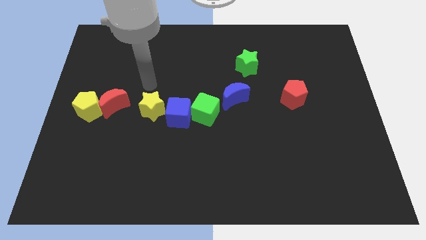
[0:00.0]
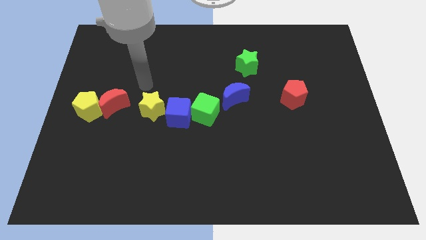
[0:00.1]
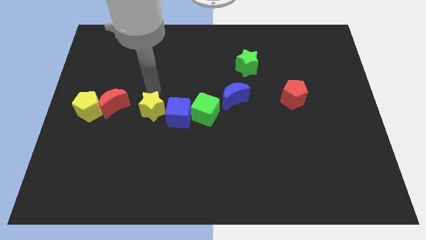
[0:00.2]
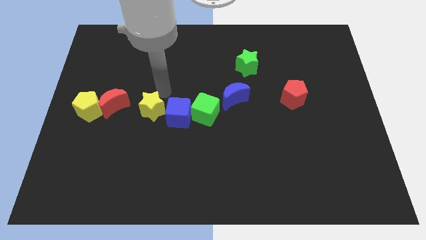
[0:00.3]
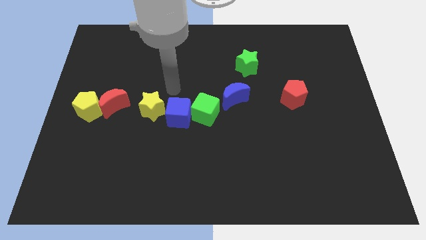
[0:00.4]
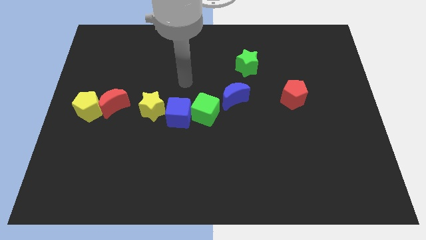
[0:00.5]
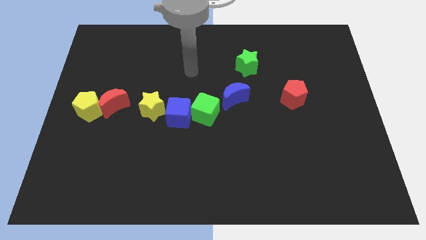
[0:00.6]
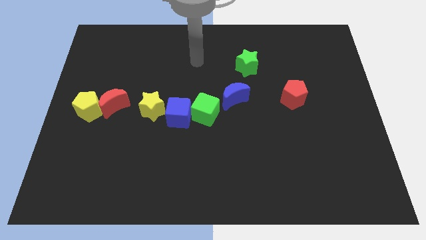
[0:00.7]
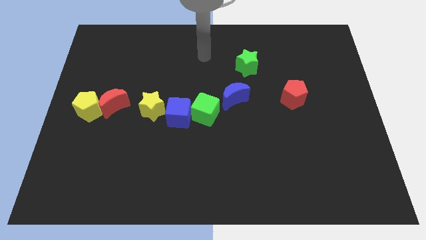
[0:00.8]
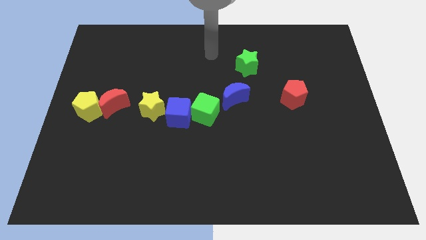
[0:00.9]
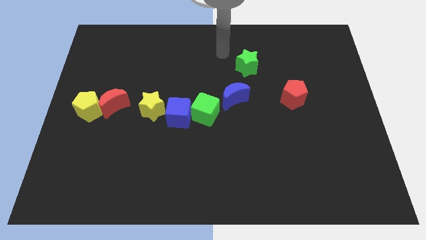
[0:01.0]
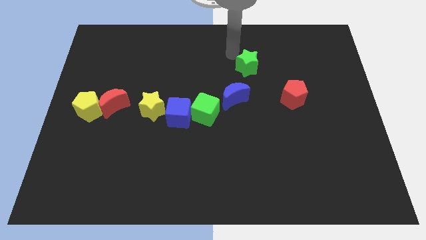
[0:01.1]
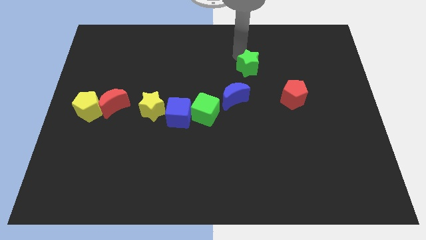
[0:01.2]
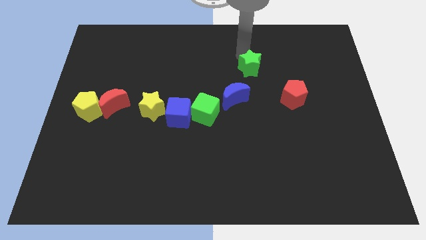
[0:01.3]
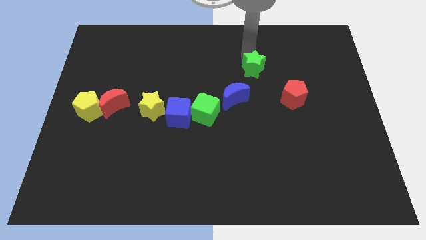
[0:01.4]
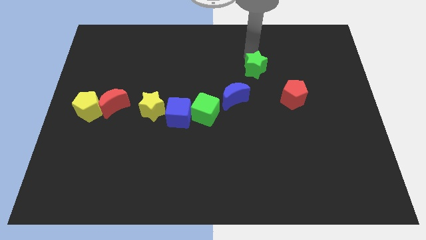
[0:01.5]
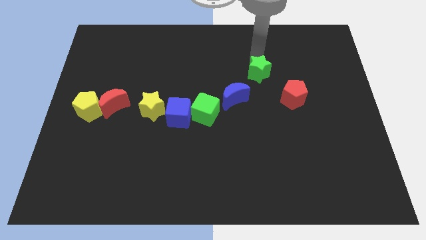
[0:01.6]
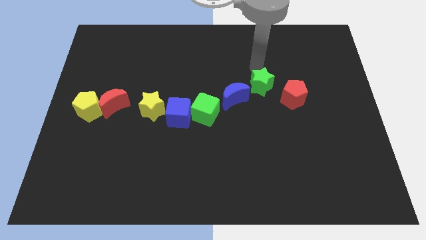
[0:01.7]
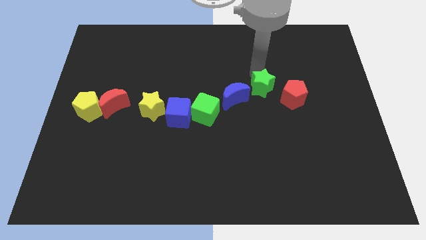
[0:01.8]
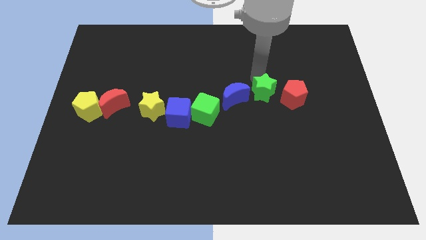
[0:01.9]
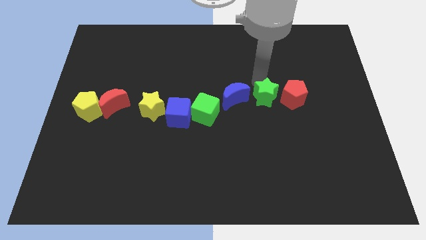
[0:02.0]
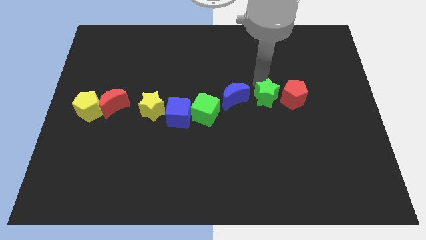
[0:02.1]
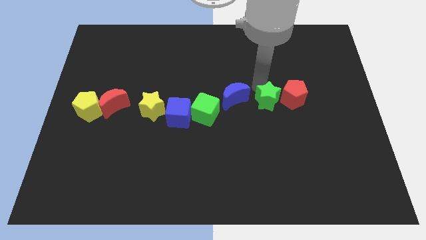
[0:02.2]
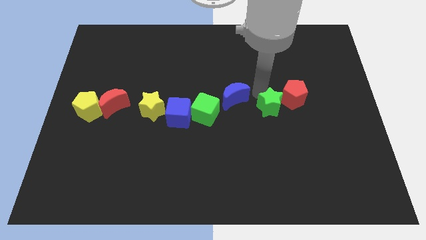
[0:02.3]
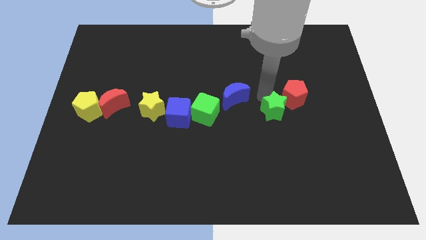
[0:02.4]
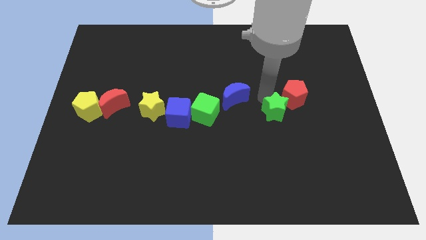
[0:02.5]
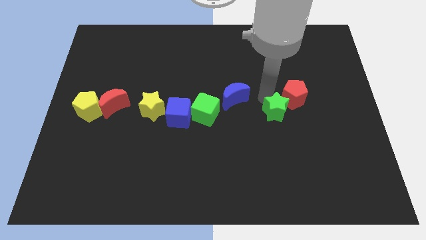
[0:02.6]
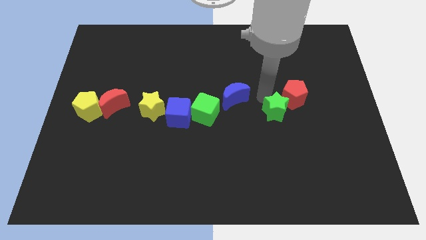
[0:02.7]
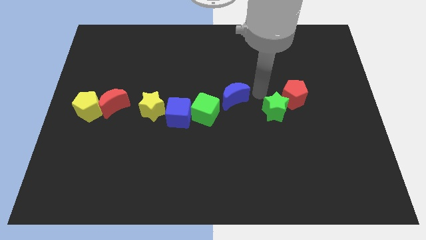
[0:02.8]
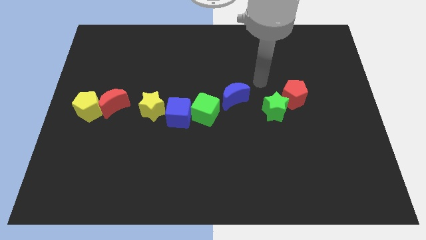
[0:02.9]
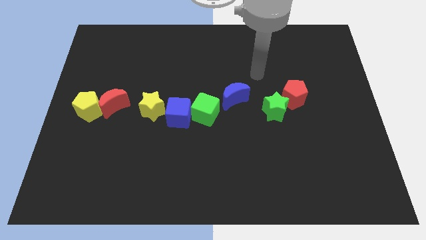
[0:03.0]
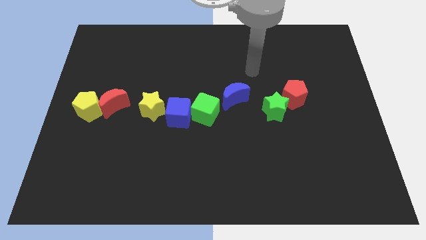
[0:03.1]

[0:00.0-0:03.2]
push the green star to the bottom left of red pentagon

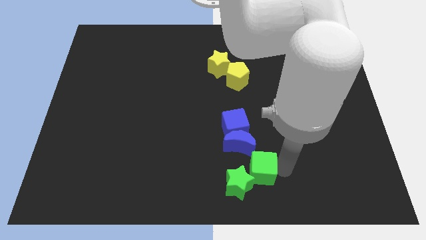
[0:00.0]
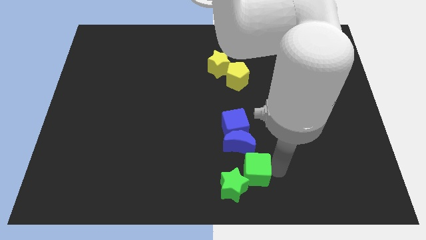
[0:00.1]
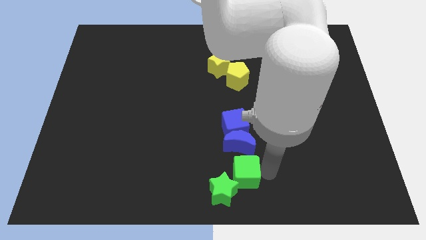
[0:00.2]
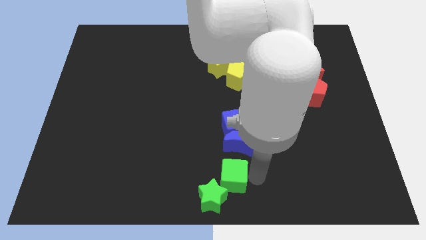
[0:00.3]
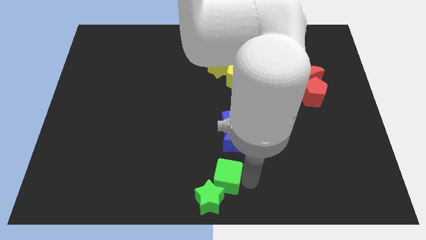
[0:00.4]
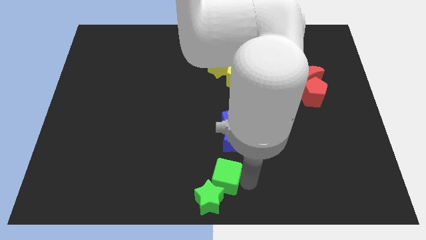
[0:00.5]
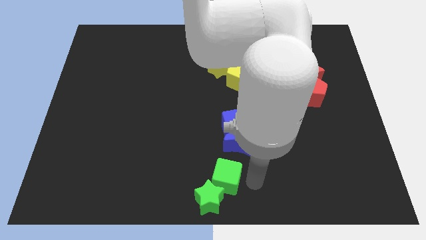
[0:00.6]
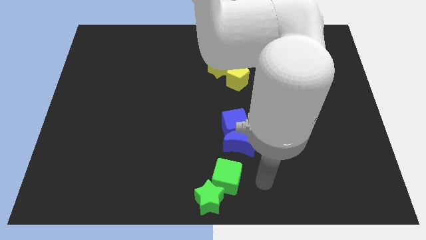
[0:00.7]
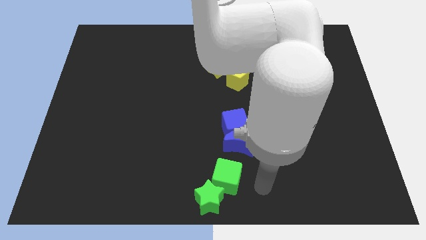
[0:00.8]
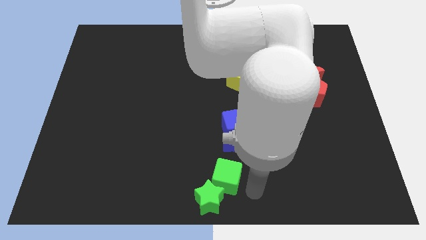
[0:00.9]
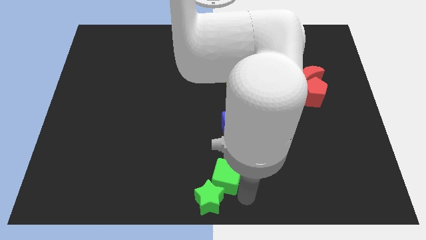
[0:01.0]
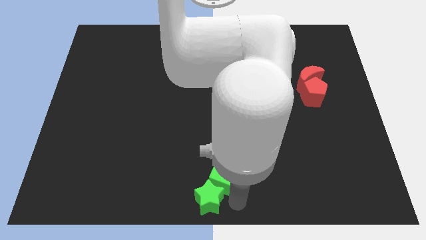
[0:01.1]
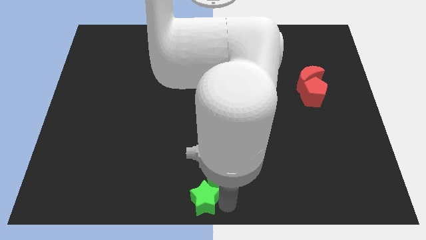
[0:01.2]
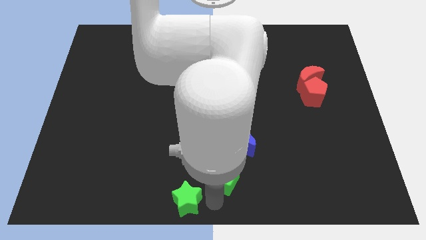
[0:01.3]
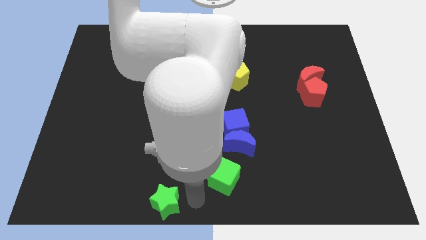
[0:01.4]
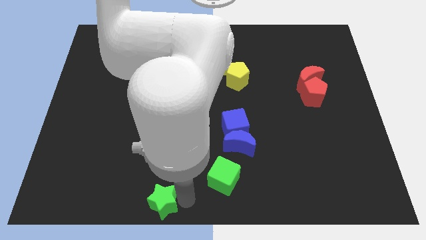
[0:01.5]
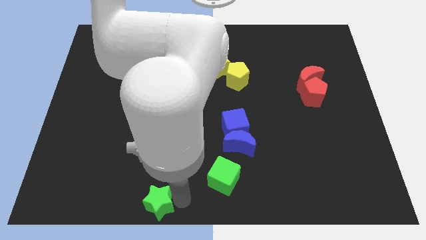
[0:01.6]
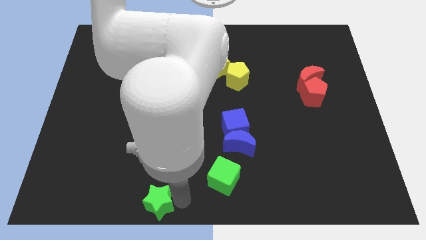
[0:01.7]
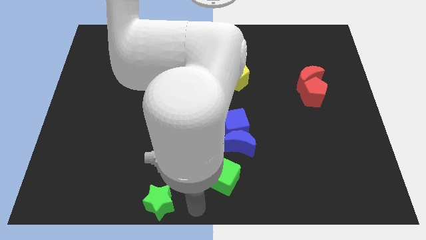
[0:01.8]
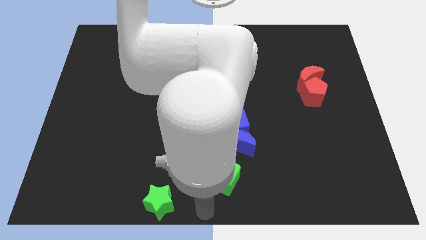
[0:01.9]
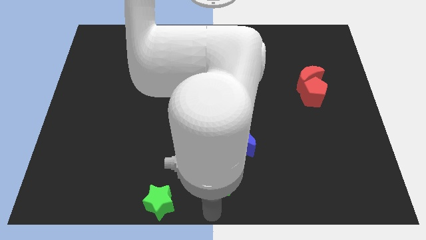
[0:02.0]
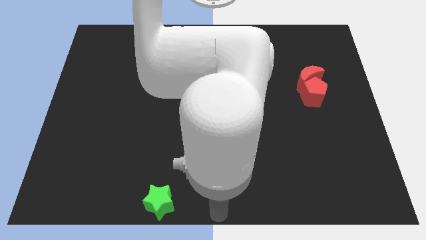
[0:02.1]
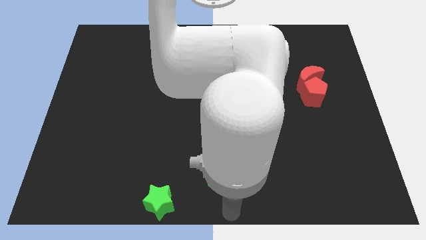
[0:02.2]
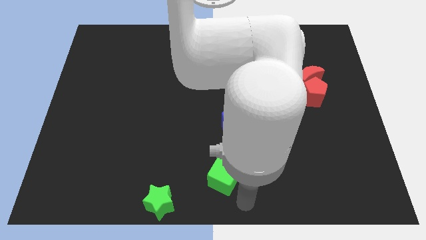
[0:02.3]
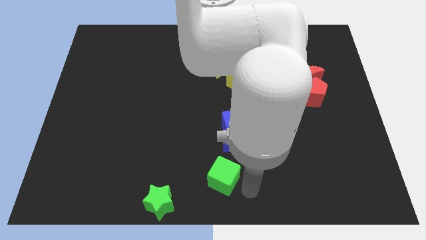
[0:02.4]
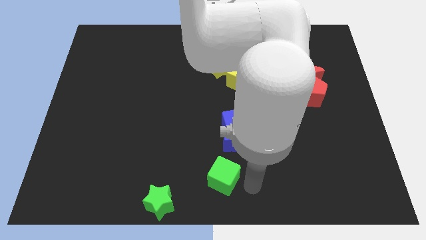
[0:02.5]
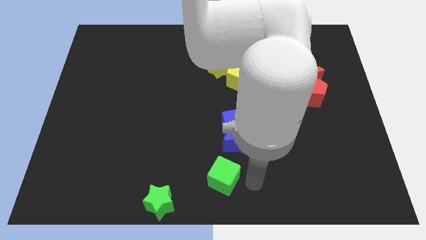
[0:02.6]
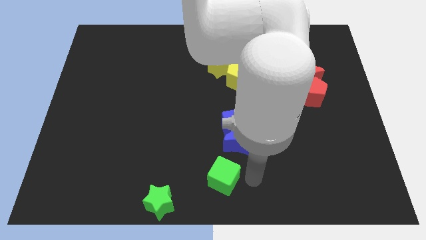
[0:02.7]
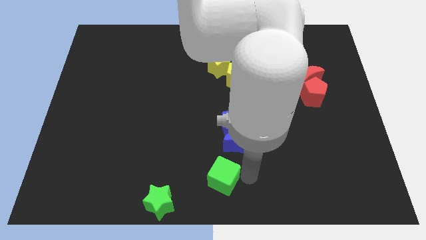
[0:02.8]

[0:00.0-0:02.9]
move the green star parallel to the green cube

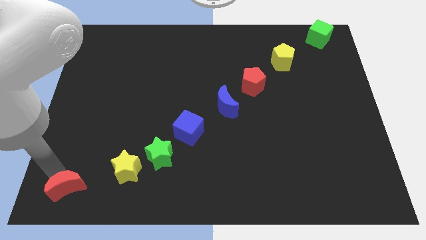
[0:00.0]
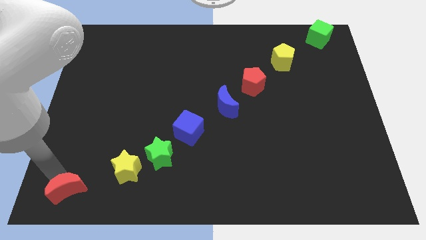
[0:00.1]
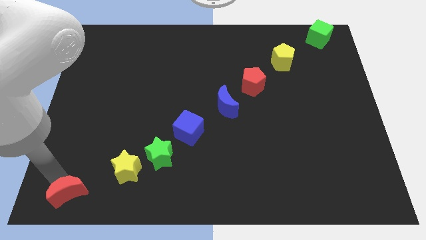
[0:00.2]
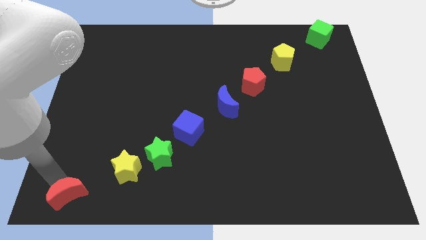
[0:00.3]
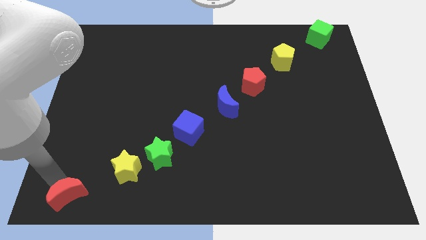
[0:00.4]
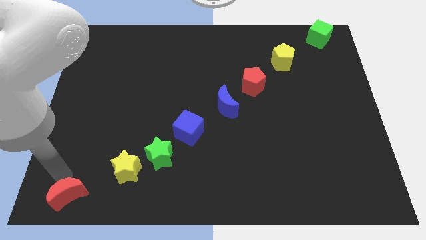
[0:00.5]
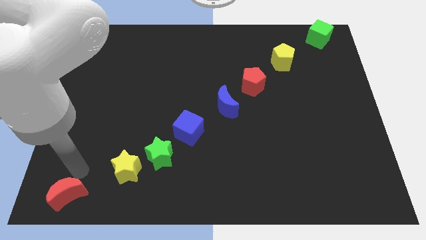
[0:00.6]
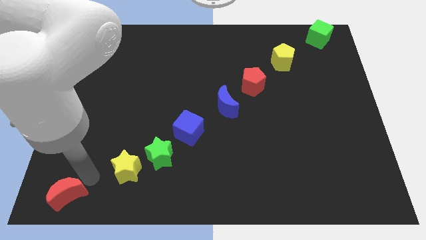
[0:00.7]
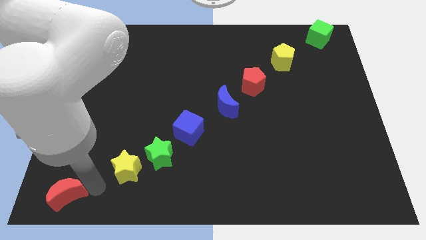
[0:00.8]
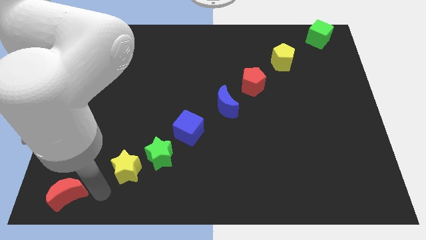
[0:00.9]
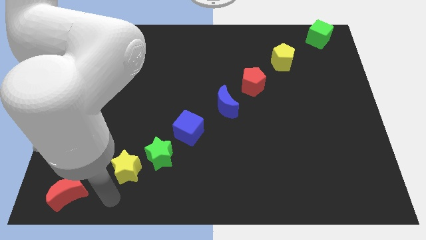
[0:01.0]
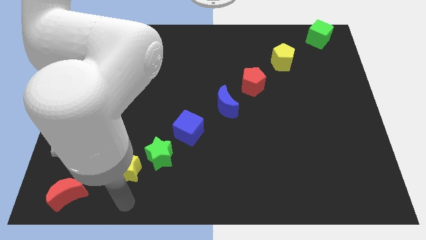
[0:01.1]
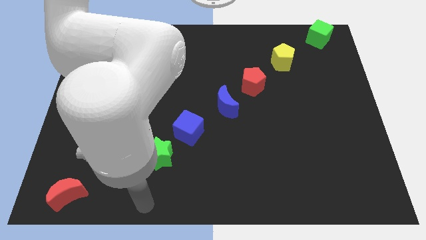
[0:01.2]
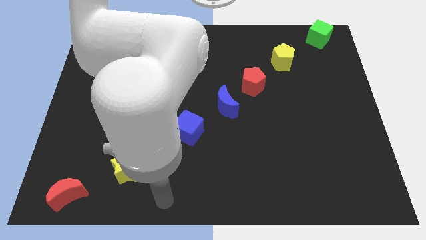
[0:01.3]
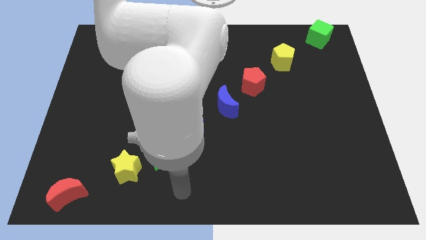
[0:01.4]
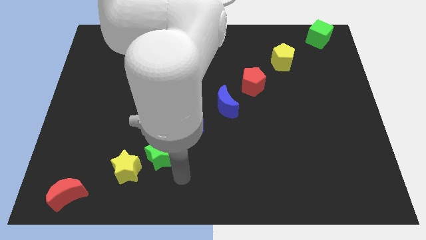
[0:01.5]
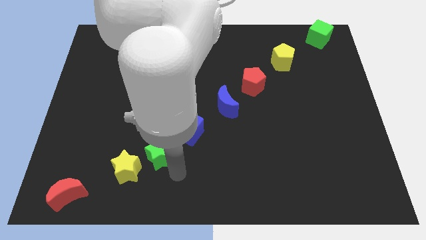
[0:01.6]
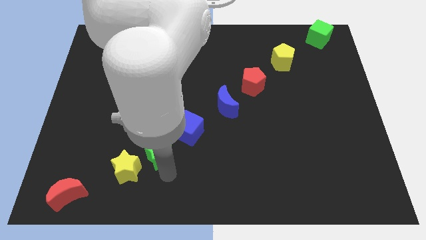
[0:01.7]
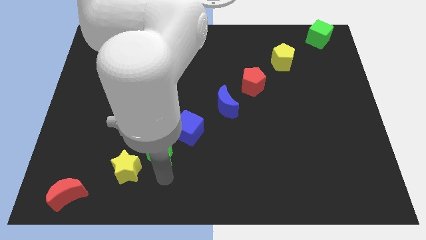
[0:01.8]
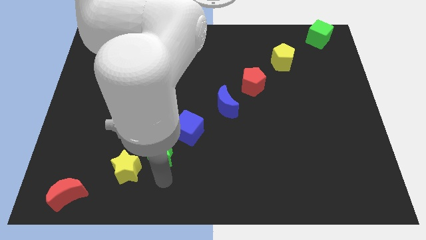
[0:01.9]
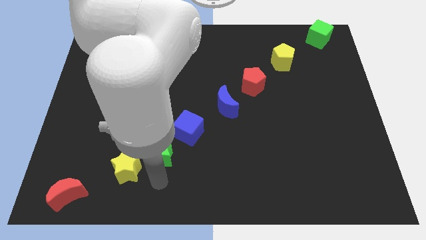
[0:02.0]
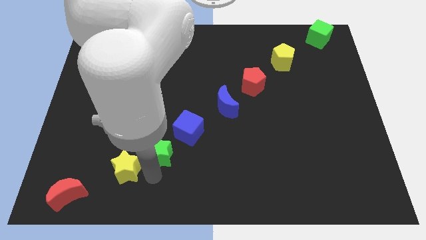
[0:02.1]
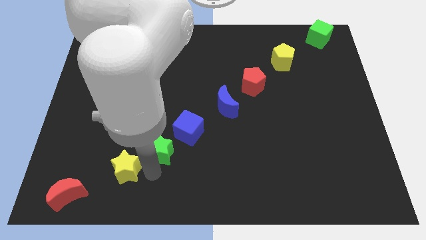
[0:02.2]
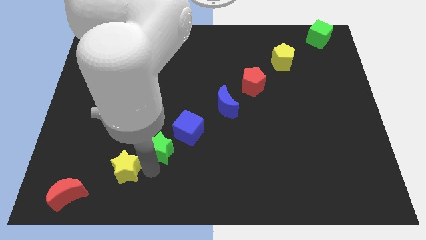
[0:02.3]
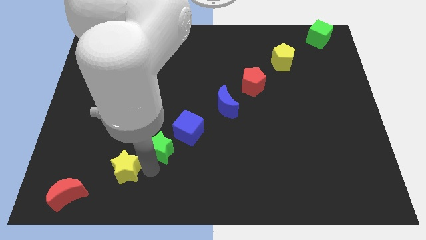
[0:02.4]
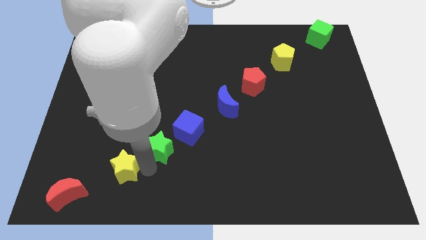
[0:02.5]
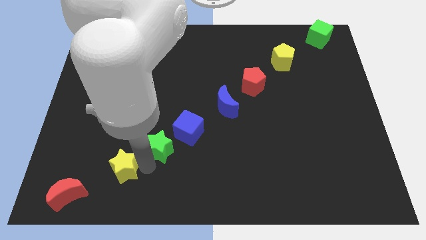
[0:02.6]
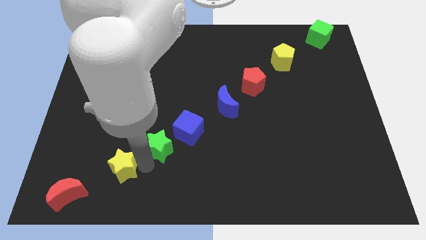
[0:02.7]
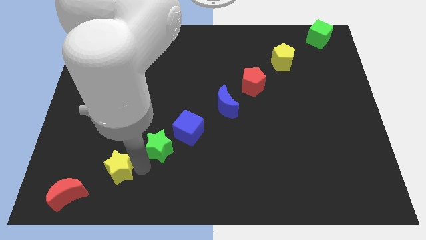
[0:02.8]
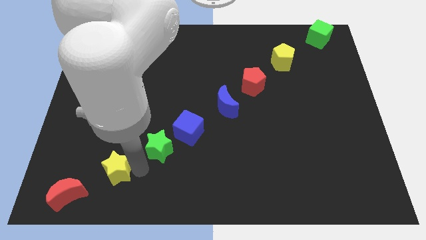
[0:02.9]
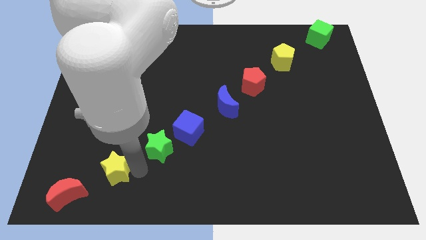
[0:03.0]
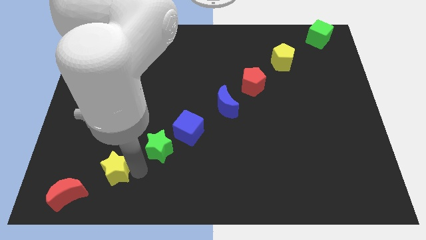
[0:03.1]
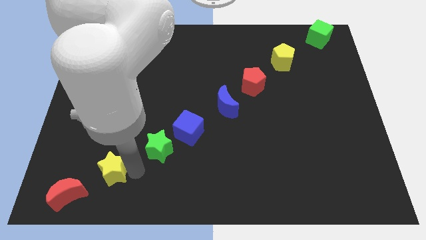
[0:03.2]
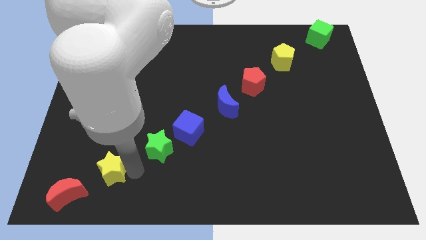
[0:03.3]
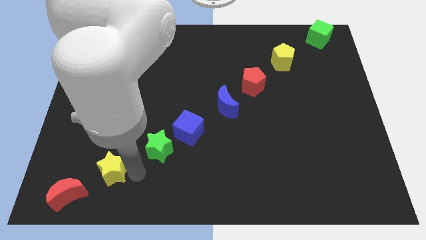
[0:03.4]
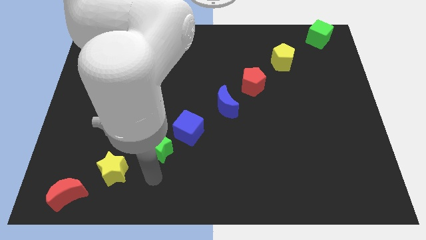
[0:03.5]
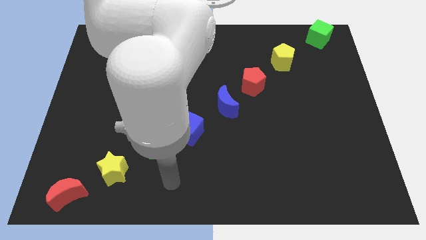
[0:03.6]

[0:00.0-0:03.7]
adjust the group of blocks to form a diagonal line
